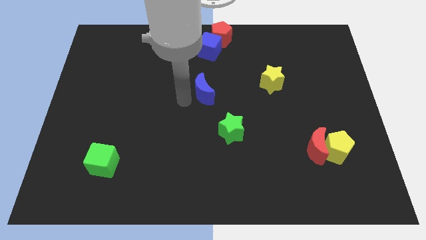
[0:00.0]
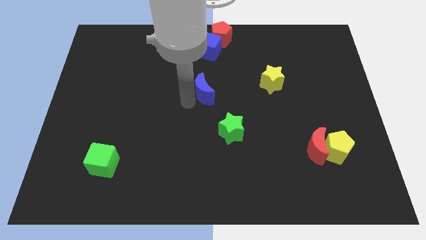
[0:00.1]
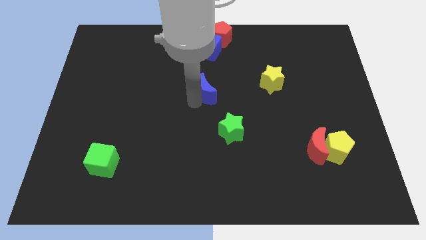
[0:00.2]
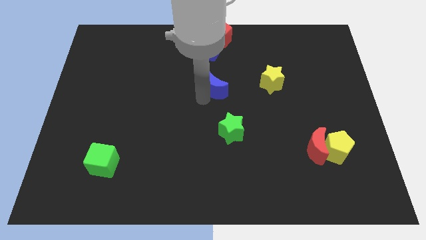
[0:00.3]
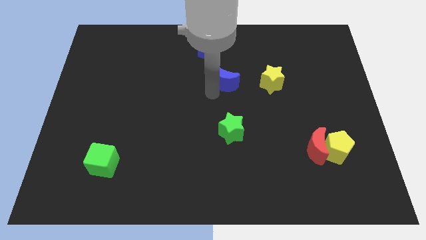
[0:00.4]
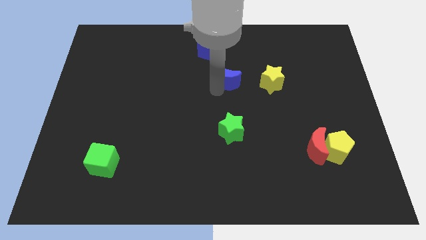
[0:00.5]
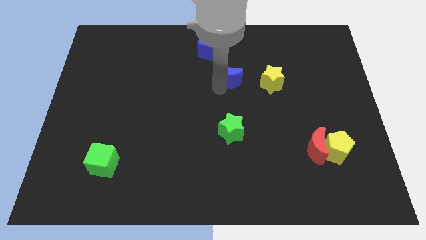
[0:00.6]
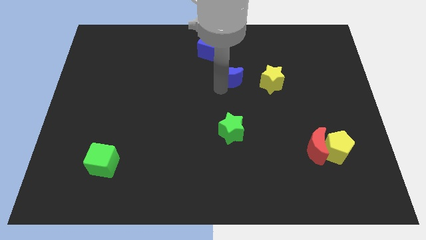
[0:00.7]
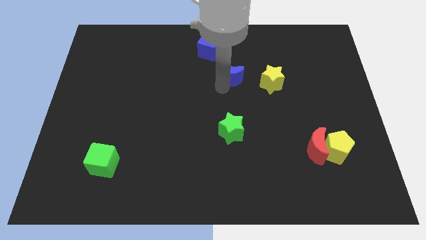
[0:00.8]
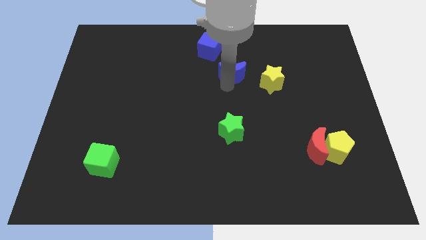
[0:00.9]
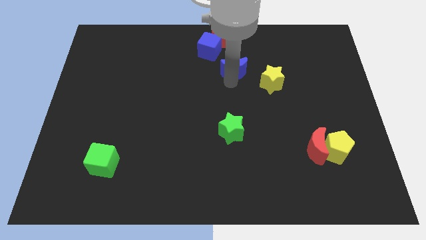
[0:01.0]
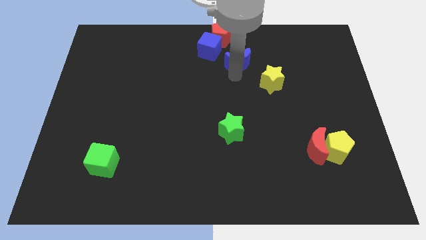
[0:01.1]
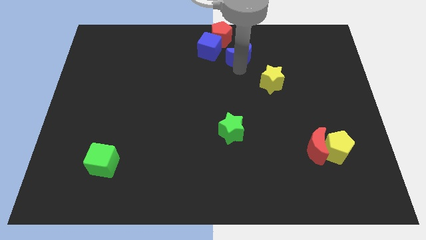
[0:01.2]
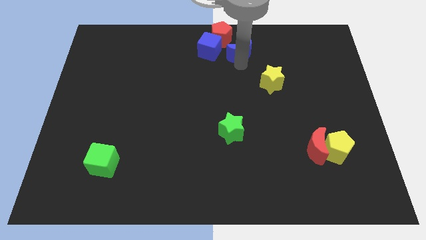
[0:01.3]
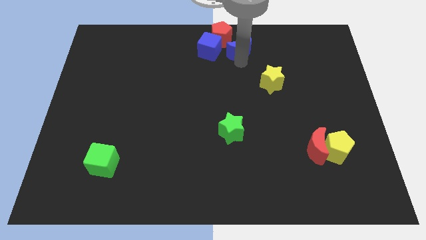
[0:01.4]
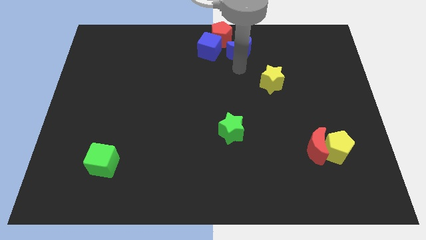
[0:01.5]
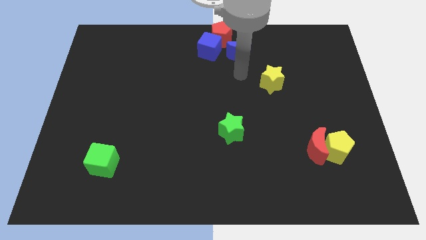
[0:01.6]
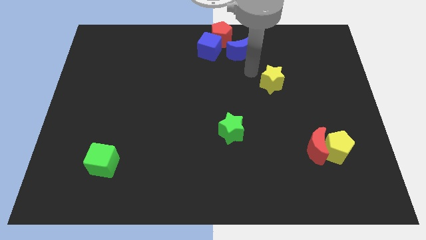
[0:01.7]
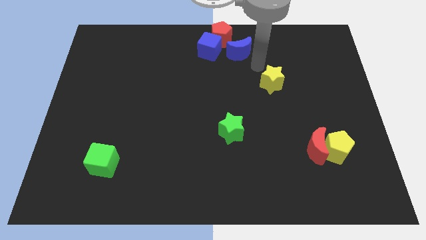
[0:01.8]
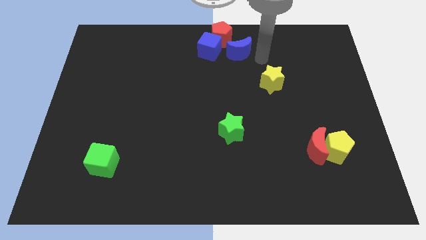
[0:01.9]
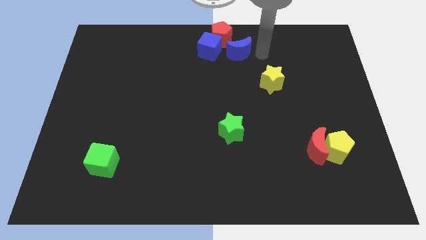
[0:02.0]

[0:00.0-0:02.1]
slide blue moon to right of blue cube

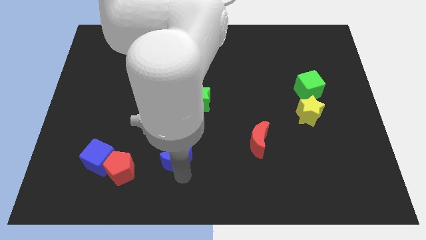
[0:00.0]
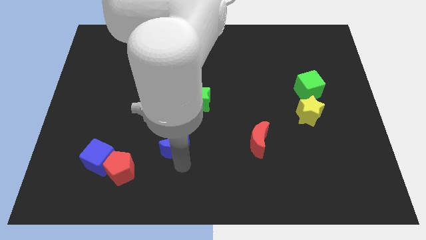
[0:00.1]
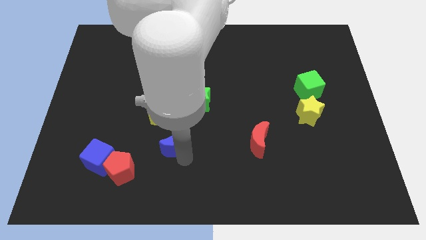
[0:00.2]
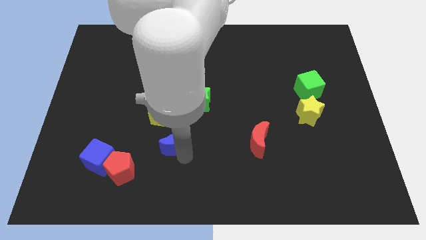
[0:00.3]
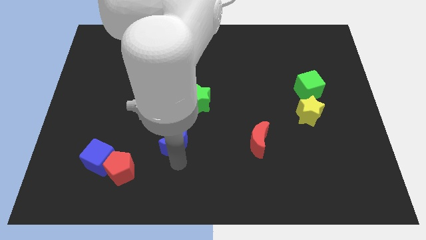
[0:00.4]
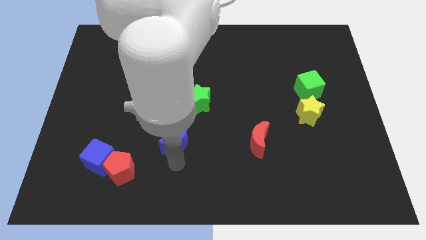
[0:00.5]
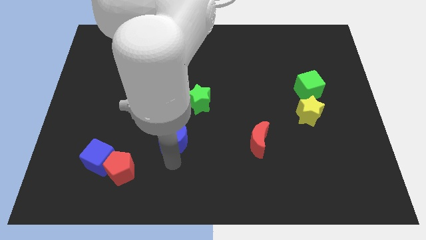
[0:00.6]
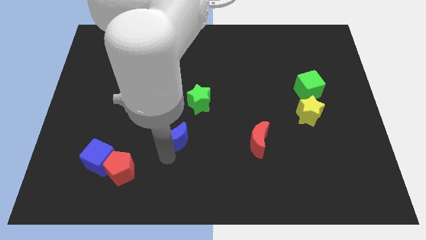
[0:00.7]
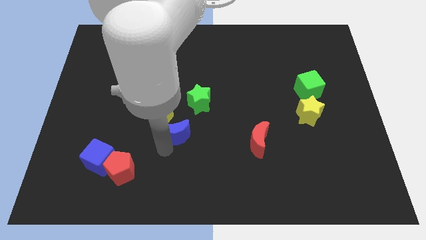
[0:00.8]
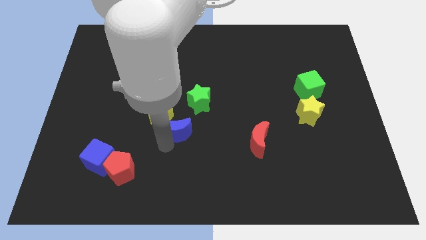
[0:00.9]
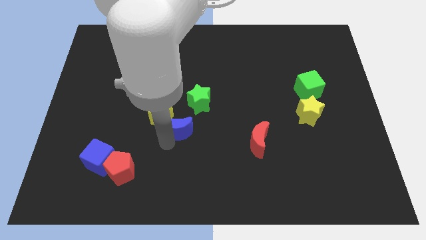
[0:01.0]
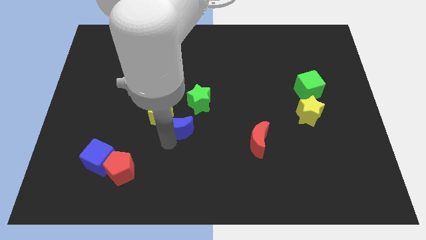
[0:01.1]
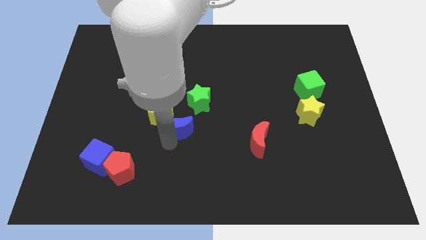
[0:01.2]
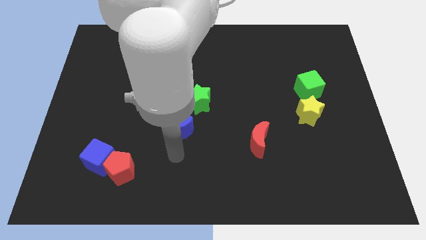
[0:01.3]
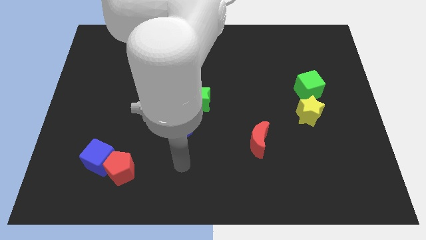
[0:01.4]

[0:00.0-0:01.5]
place the blue moon diagonally bottom right to the yellow pentagon

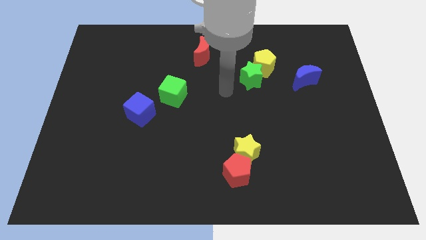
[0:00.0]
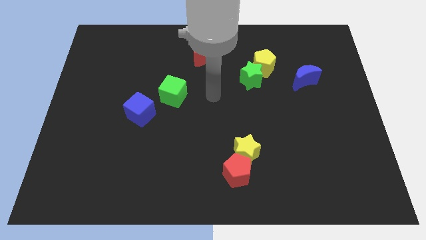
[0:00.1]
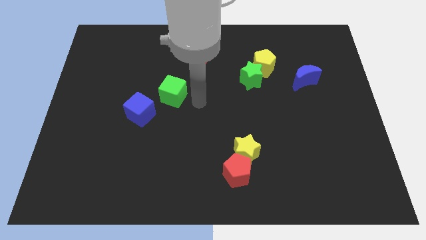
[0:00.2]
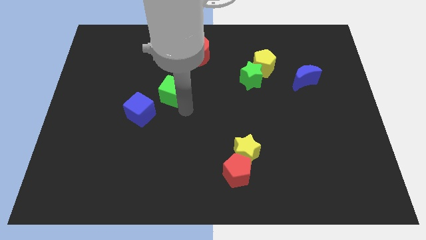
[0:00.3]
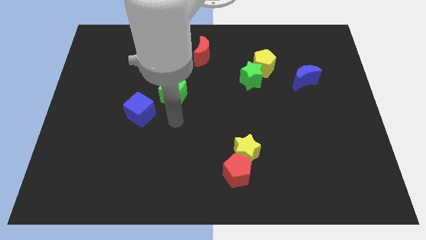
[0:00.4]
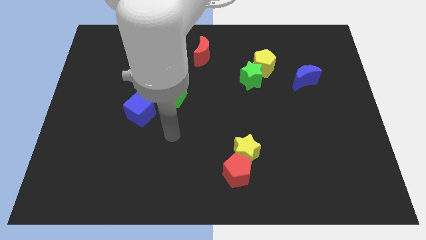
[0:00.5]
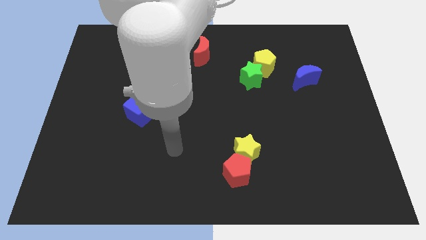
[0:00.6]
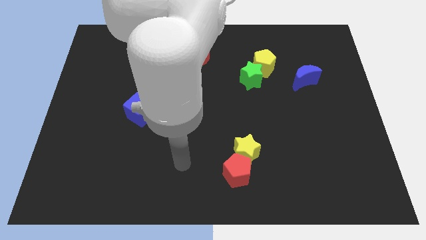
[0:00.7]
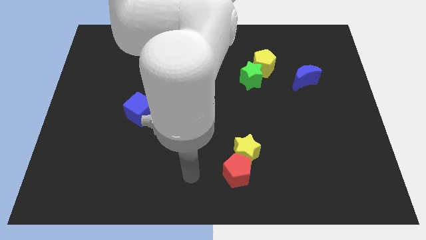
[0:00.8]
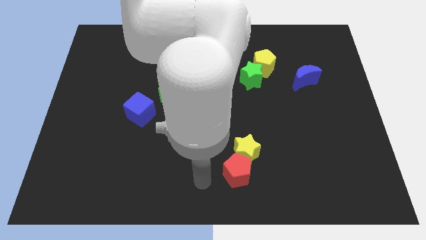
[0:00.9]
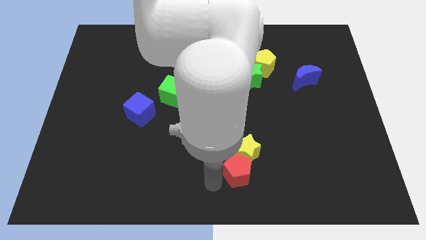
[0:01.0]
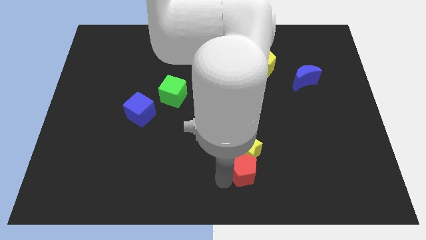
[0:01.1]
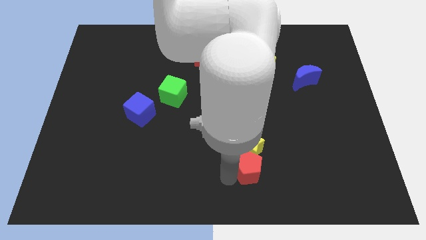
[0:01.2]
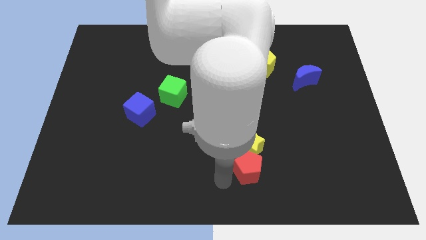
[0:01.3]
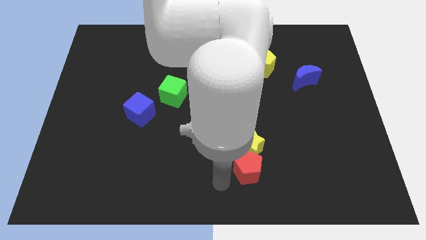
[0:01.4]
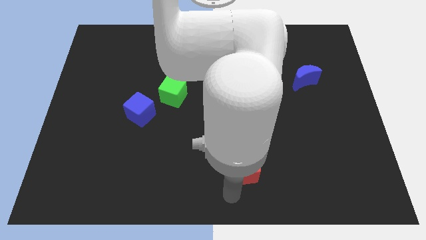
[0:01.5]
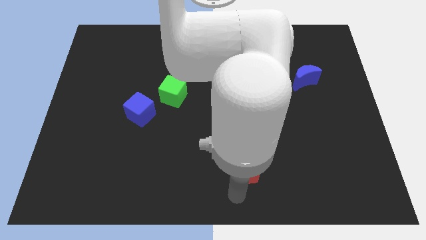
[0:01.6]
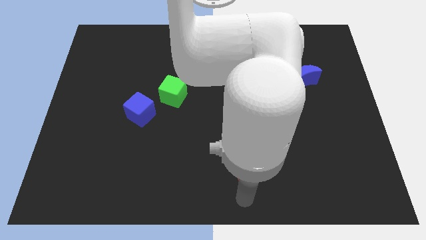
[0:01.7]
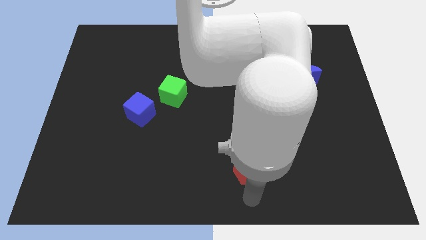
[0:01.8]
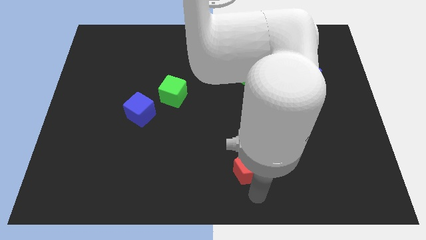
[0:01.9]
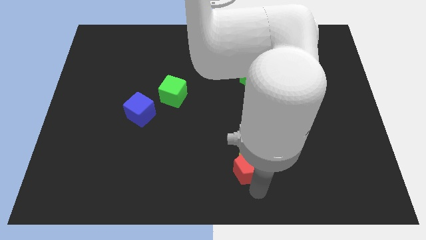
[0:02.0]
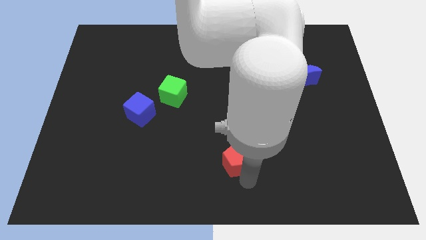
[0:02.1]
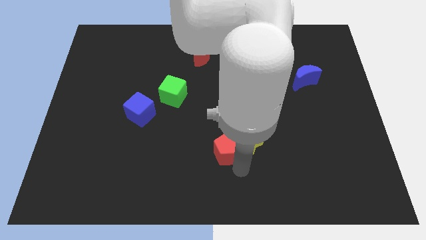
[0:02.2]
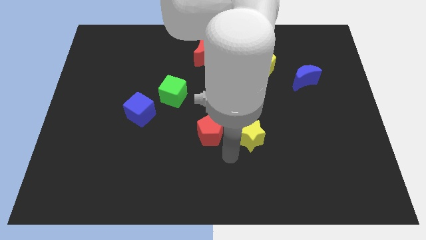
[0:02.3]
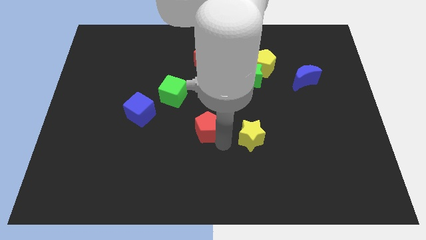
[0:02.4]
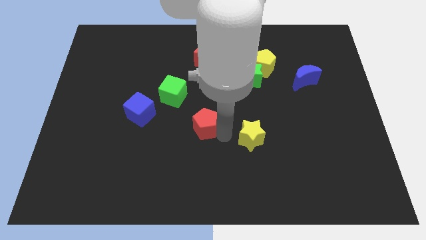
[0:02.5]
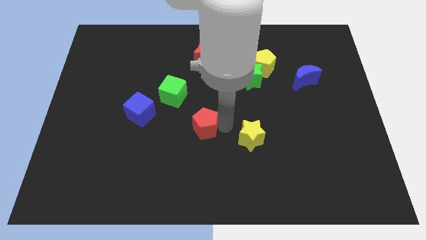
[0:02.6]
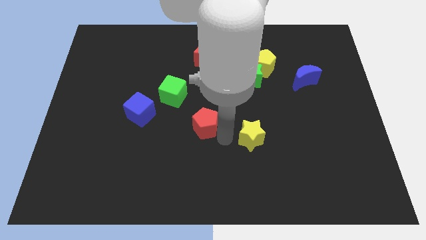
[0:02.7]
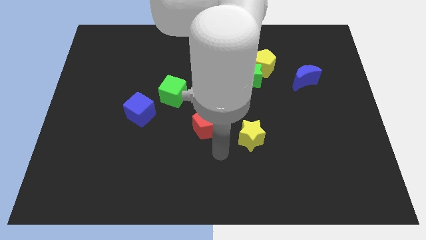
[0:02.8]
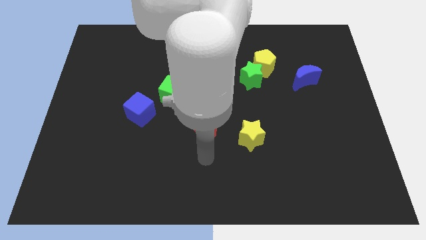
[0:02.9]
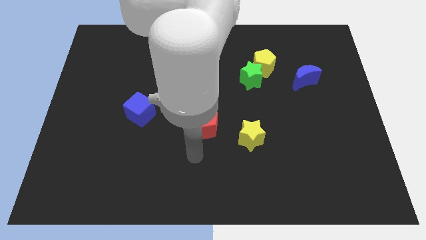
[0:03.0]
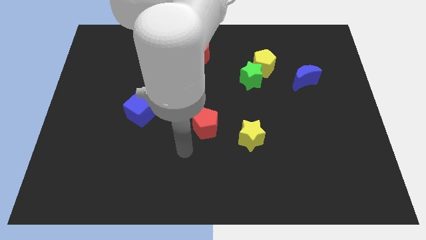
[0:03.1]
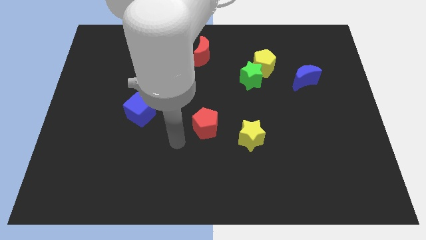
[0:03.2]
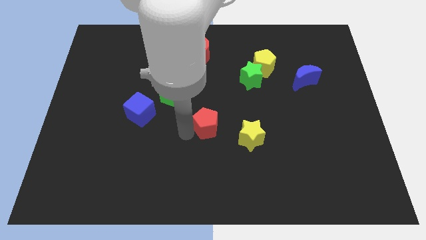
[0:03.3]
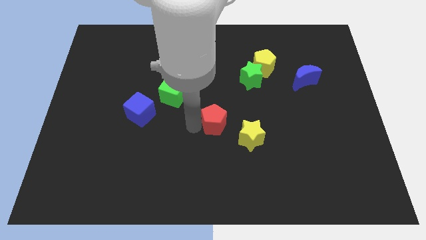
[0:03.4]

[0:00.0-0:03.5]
separate the red pentagon and yellow star

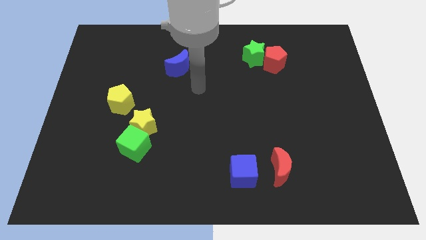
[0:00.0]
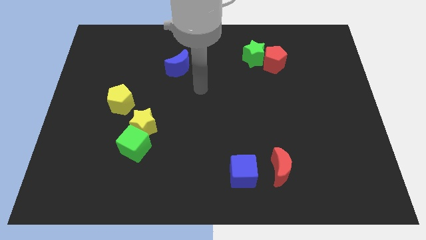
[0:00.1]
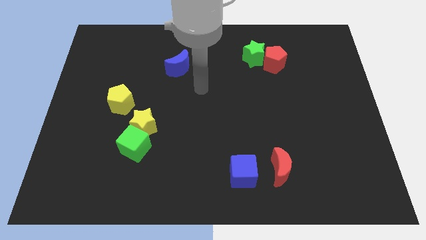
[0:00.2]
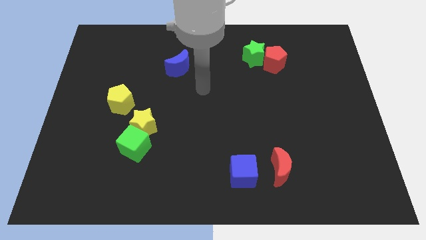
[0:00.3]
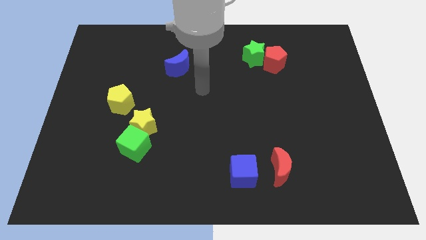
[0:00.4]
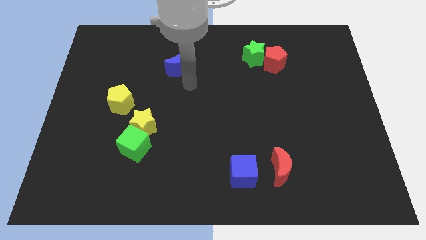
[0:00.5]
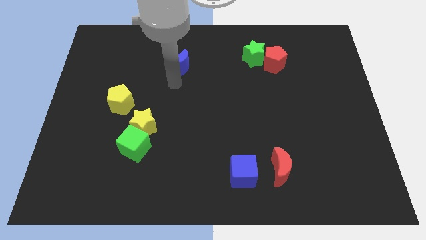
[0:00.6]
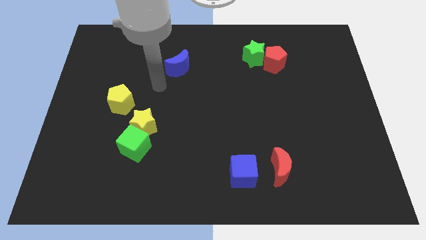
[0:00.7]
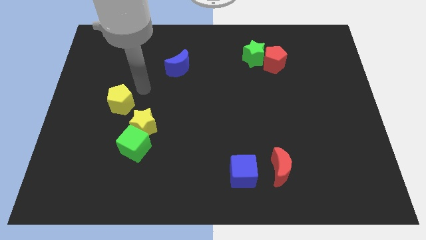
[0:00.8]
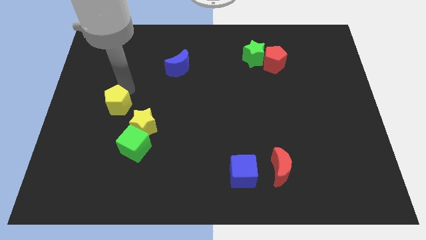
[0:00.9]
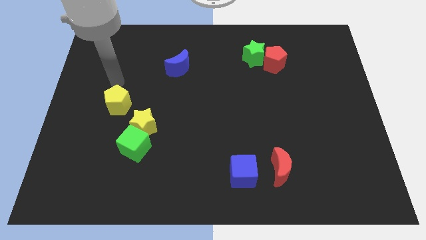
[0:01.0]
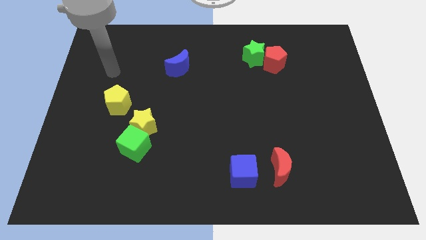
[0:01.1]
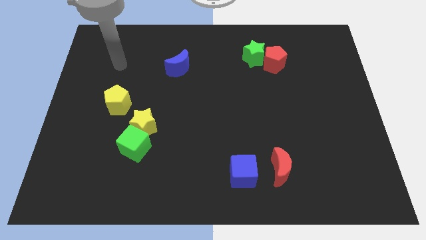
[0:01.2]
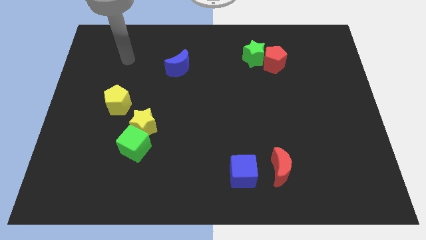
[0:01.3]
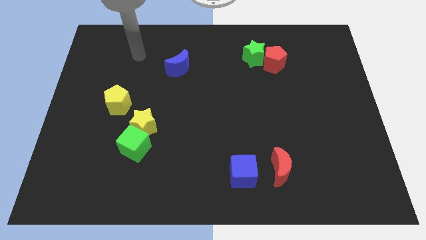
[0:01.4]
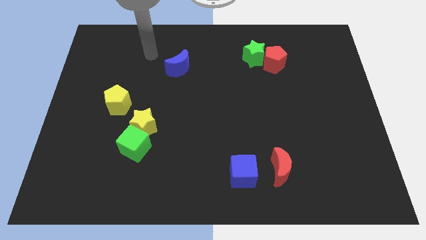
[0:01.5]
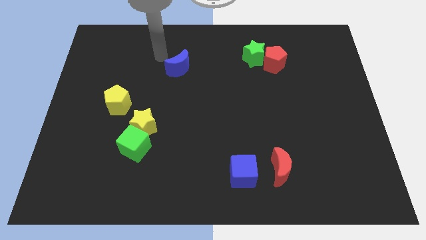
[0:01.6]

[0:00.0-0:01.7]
move your arm towards the blue crescent

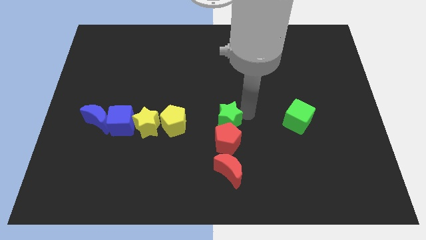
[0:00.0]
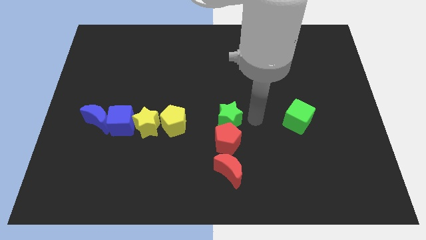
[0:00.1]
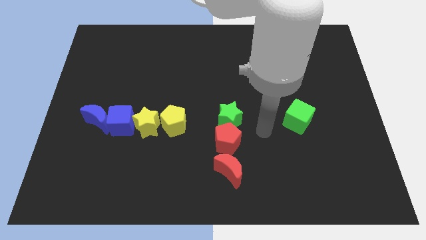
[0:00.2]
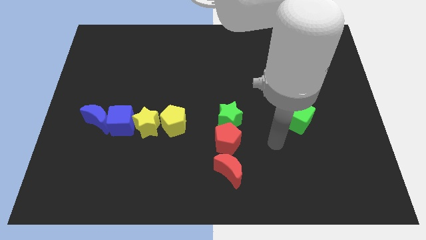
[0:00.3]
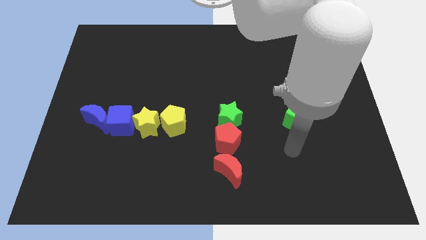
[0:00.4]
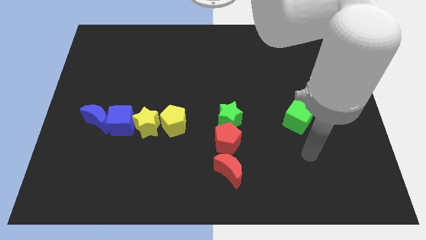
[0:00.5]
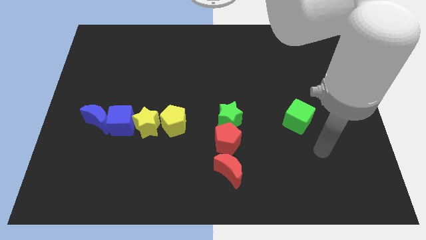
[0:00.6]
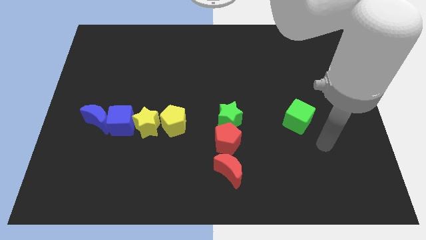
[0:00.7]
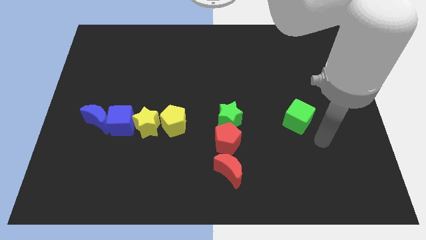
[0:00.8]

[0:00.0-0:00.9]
move your hand around the green cube
